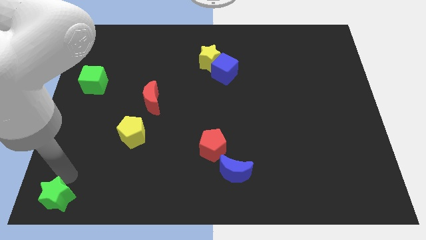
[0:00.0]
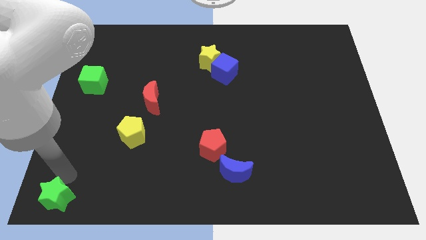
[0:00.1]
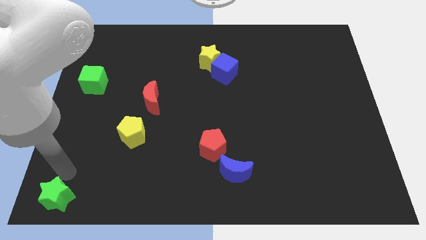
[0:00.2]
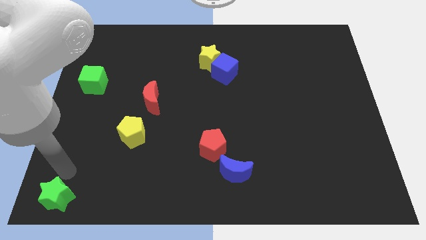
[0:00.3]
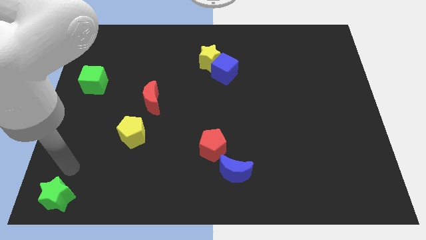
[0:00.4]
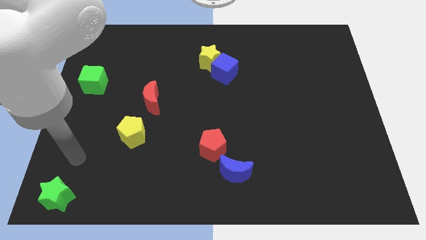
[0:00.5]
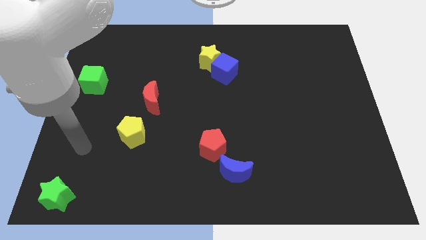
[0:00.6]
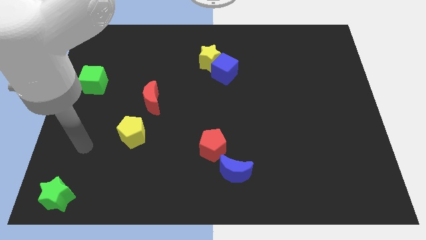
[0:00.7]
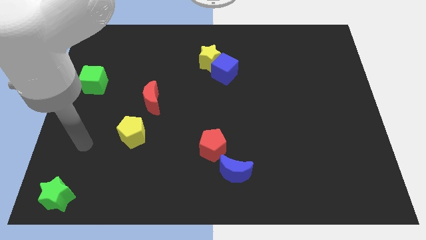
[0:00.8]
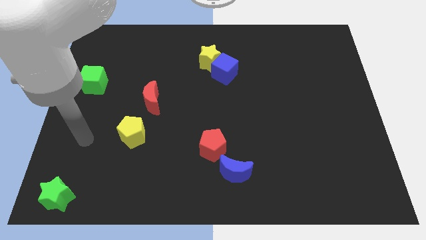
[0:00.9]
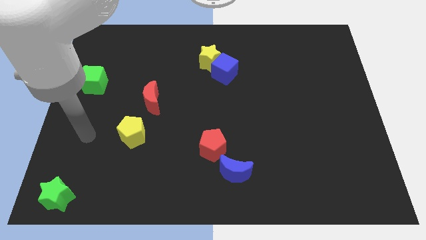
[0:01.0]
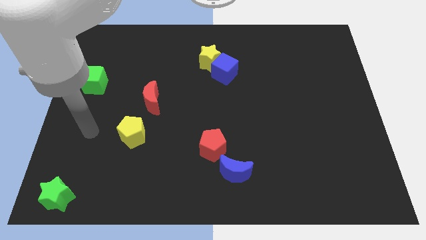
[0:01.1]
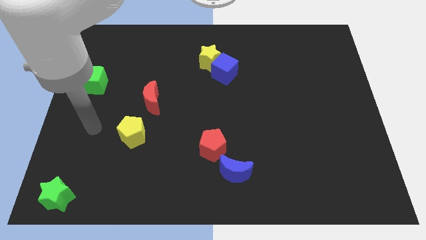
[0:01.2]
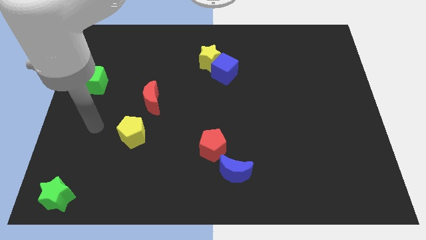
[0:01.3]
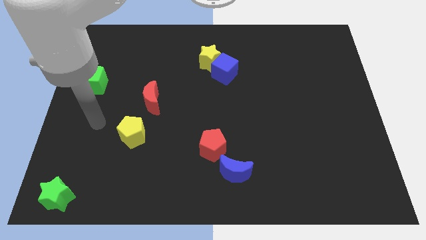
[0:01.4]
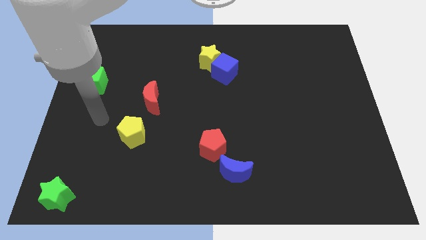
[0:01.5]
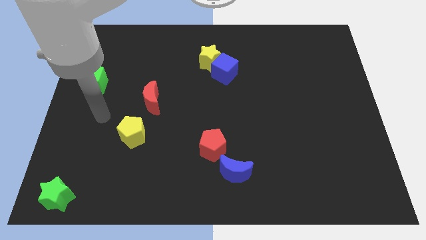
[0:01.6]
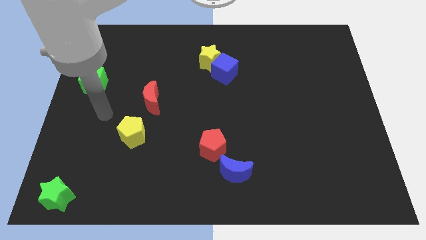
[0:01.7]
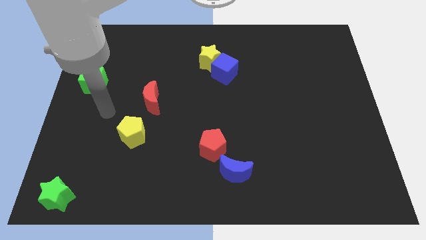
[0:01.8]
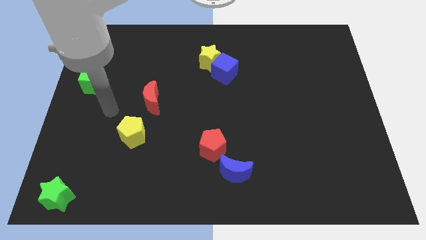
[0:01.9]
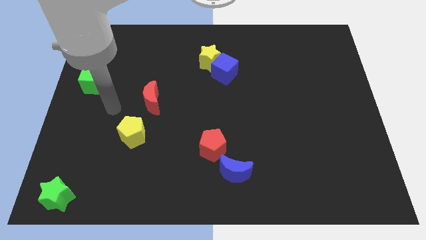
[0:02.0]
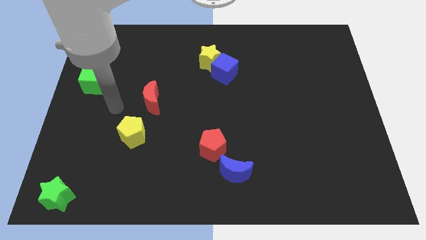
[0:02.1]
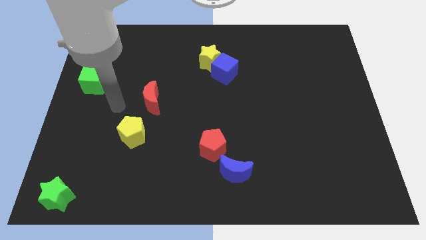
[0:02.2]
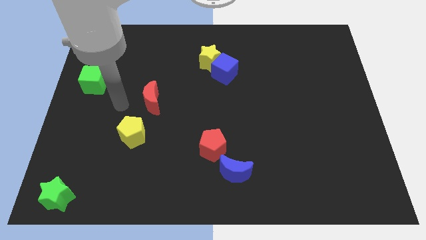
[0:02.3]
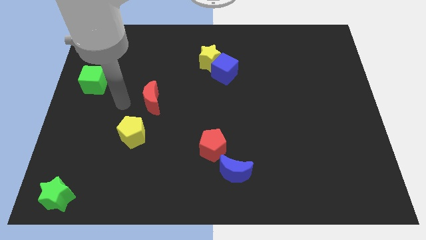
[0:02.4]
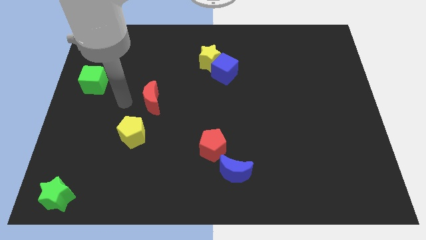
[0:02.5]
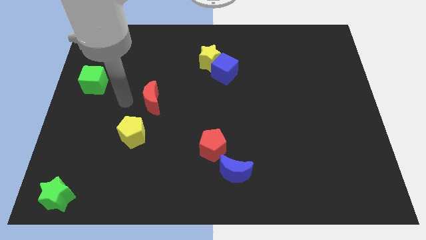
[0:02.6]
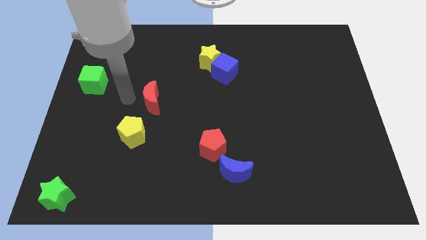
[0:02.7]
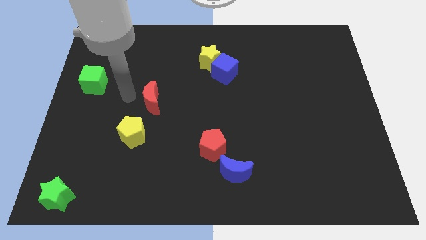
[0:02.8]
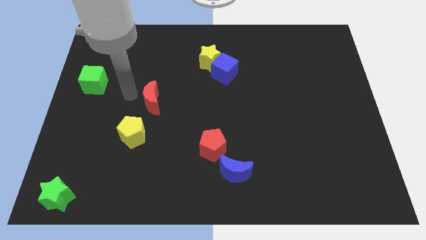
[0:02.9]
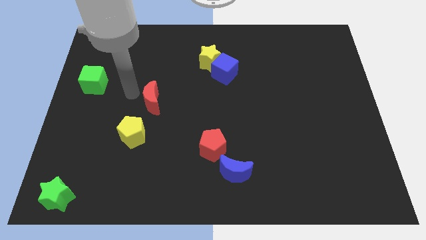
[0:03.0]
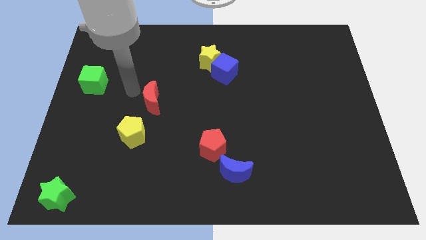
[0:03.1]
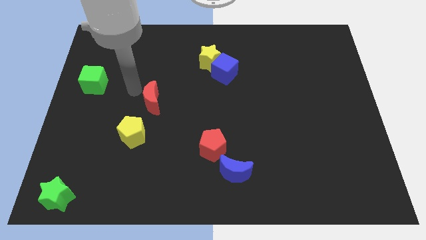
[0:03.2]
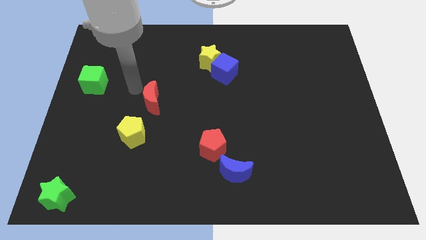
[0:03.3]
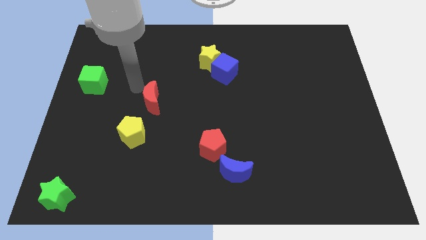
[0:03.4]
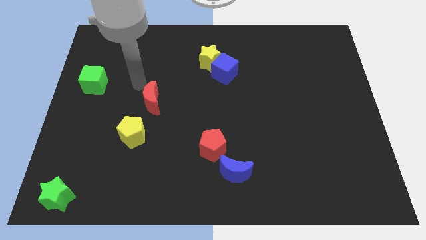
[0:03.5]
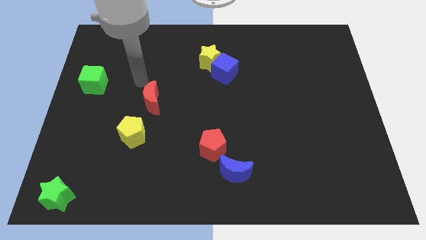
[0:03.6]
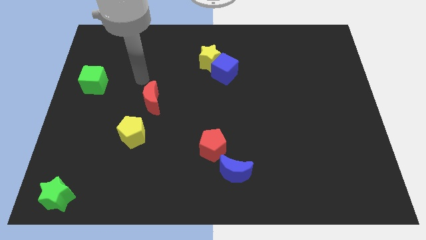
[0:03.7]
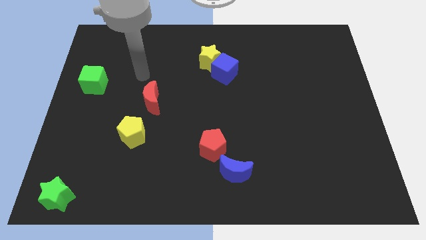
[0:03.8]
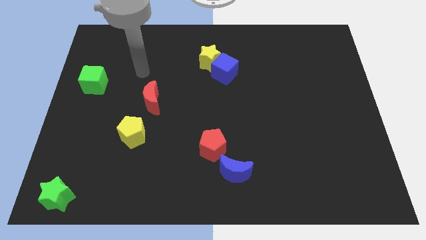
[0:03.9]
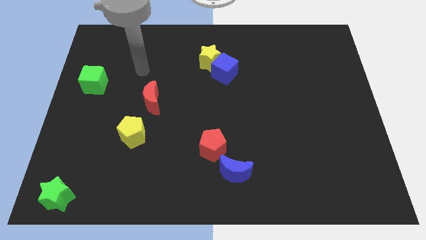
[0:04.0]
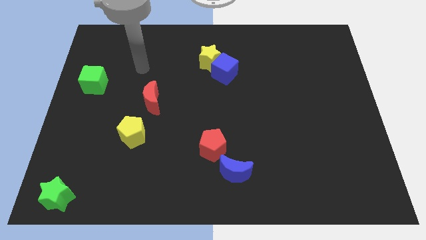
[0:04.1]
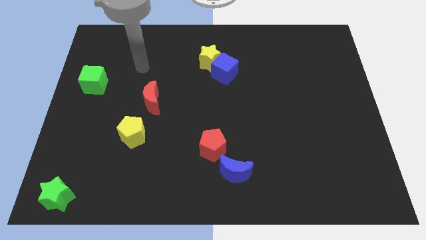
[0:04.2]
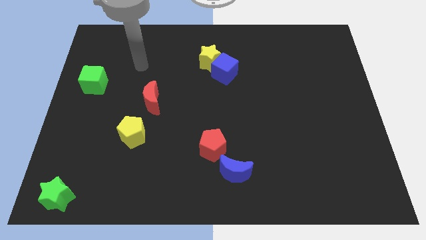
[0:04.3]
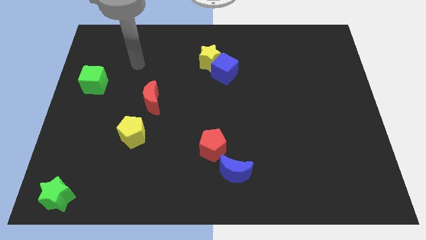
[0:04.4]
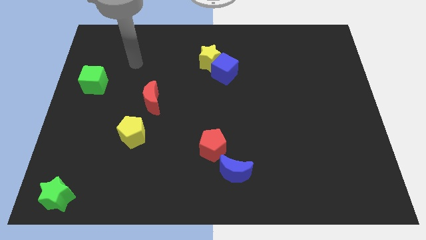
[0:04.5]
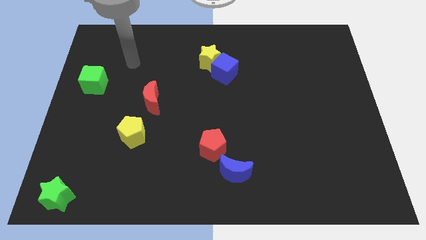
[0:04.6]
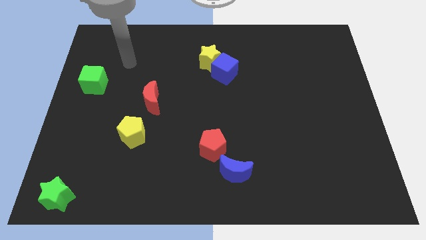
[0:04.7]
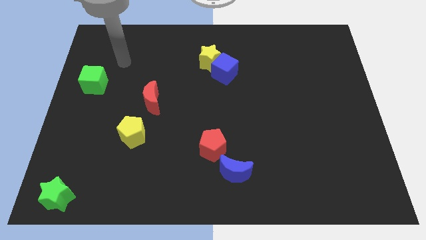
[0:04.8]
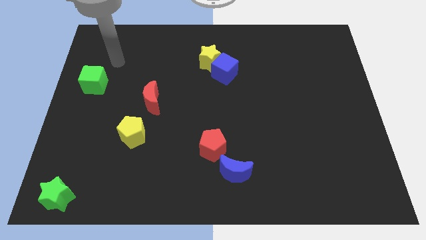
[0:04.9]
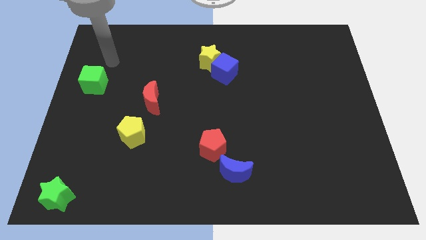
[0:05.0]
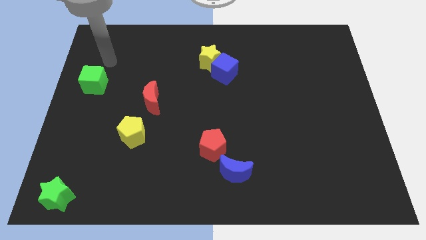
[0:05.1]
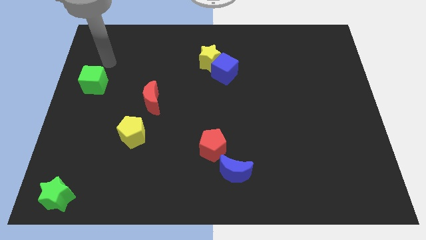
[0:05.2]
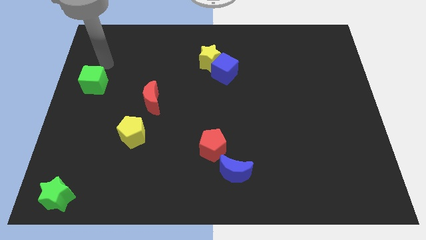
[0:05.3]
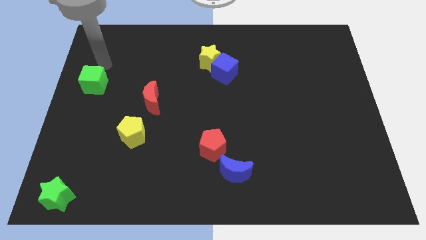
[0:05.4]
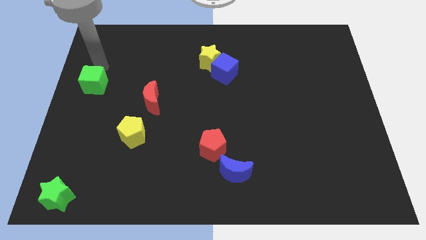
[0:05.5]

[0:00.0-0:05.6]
move your arm towards green cube

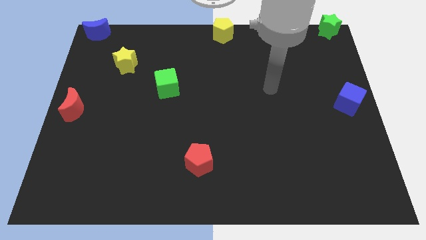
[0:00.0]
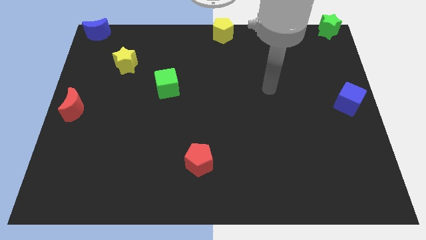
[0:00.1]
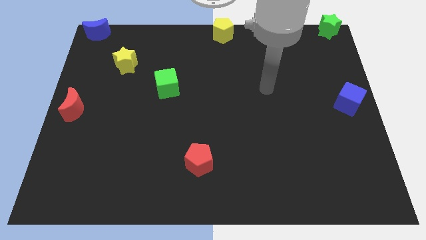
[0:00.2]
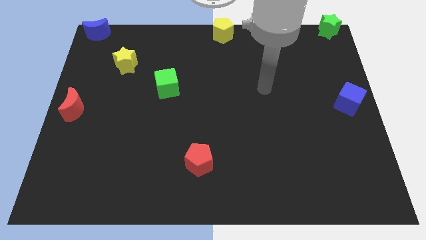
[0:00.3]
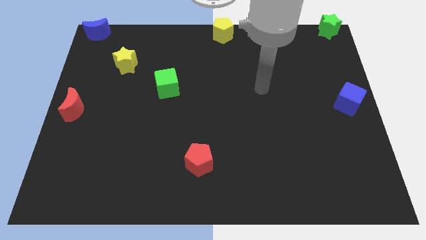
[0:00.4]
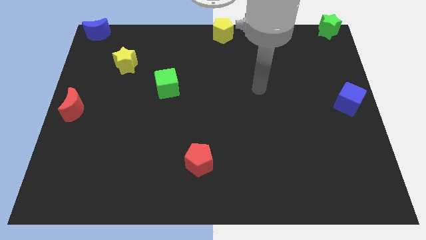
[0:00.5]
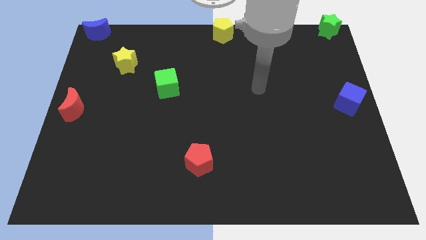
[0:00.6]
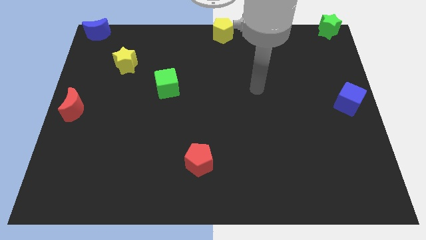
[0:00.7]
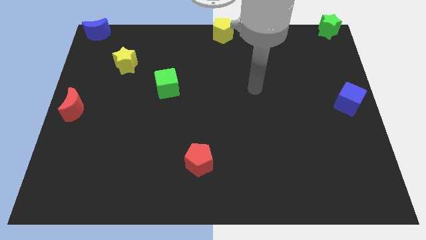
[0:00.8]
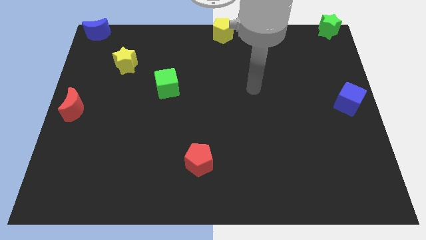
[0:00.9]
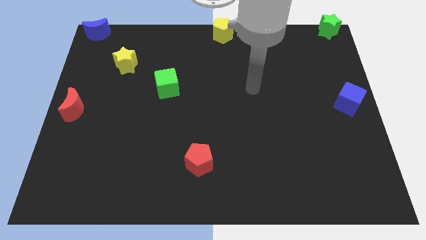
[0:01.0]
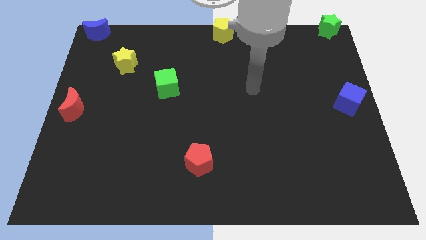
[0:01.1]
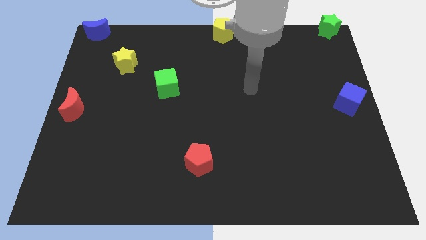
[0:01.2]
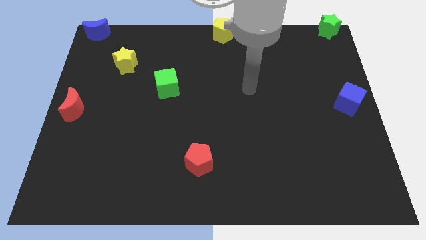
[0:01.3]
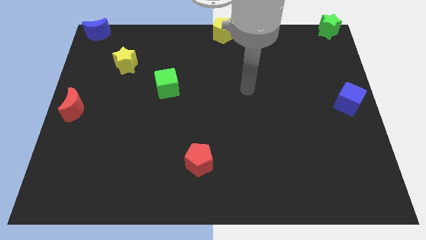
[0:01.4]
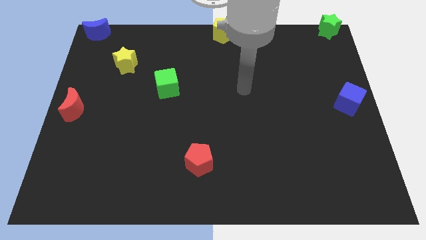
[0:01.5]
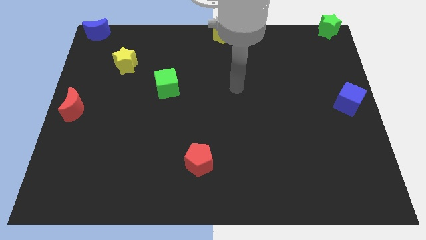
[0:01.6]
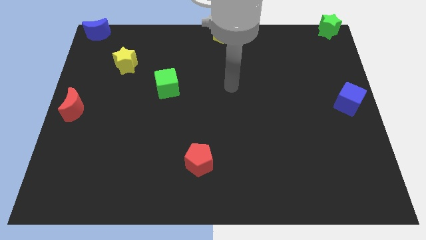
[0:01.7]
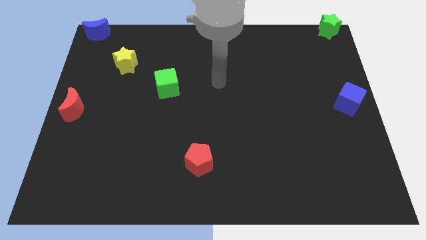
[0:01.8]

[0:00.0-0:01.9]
point the arm below the yellow pentagon

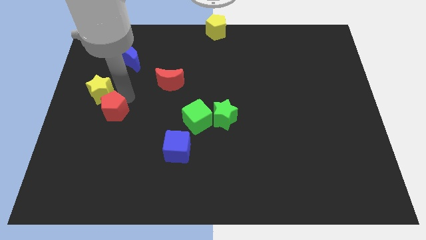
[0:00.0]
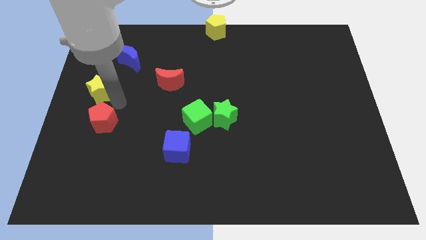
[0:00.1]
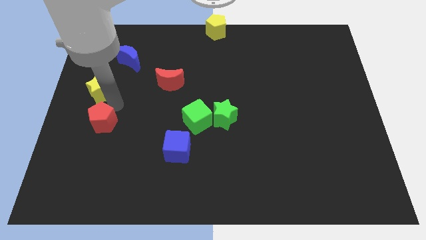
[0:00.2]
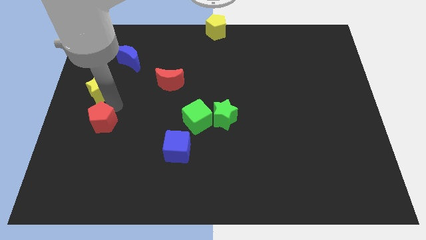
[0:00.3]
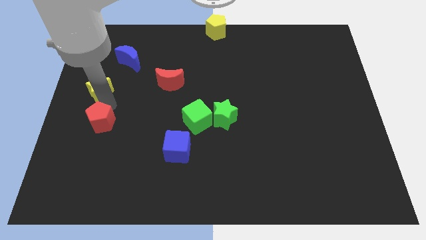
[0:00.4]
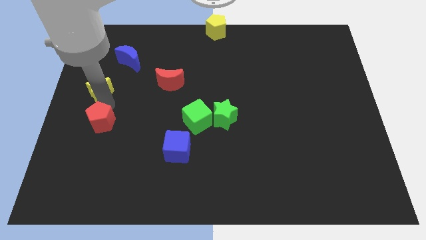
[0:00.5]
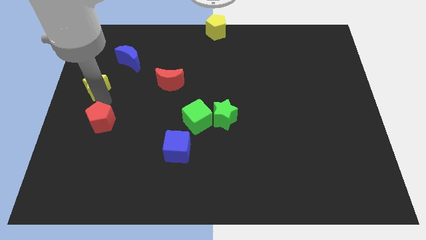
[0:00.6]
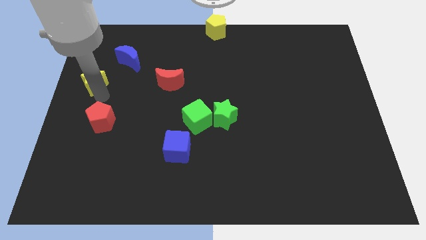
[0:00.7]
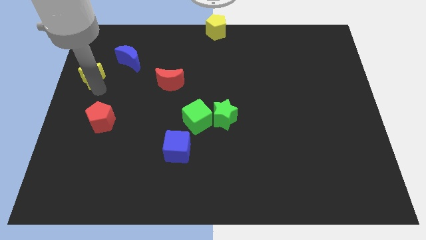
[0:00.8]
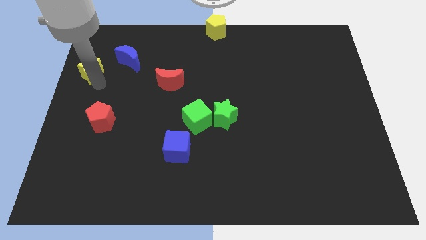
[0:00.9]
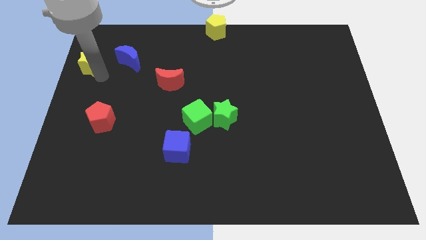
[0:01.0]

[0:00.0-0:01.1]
separate yellow star from red pentagon

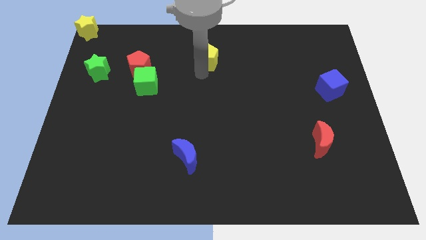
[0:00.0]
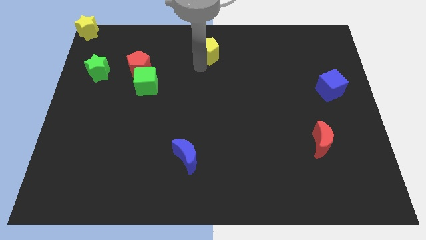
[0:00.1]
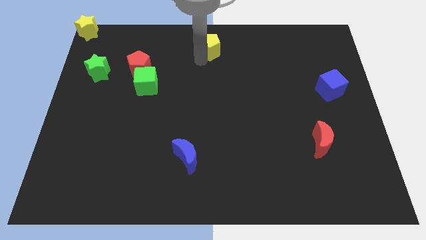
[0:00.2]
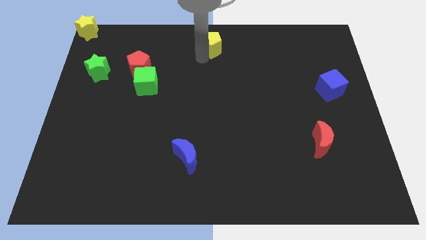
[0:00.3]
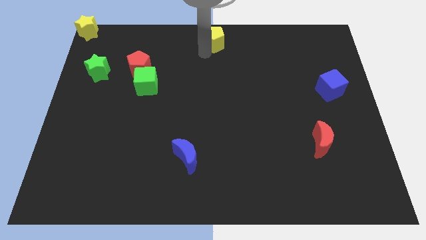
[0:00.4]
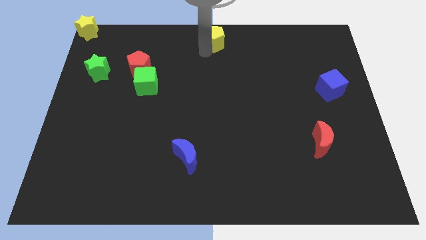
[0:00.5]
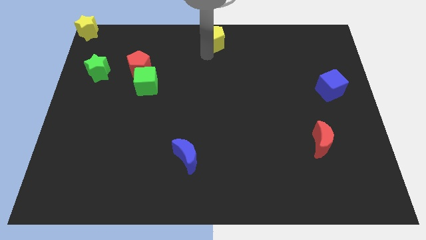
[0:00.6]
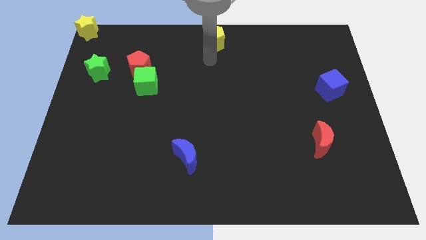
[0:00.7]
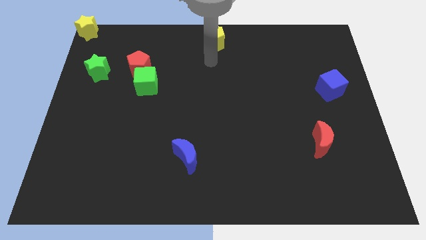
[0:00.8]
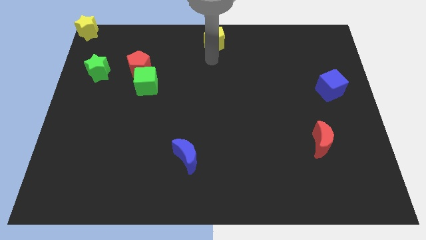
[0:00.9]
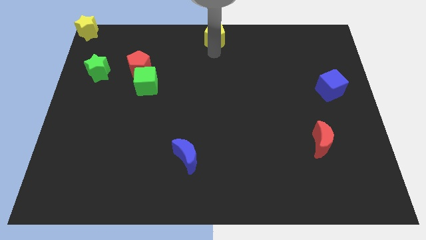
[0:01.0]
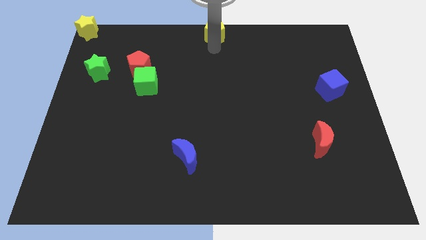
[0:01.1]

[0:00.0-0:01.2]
move yellow pentagon to the top middle of the board
